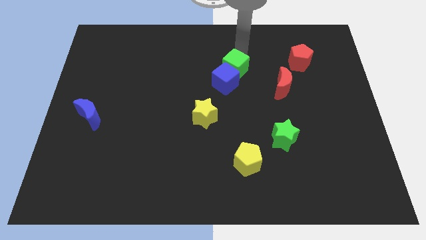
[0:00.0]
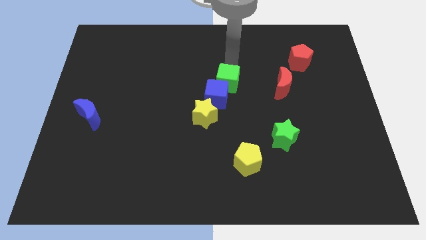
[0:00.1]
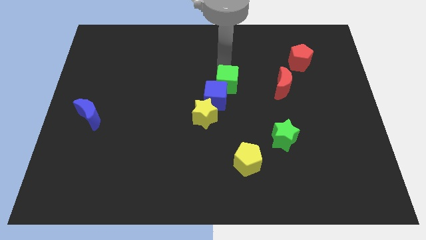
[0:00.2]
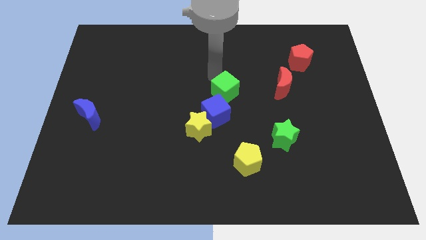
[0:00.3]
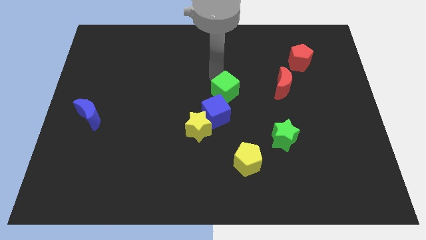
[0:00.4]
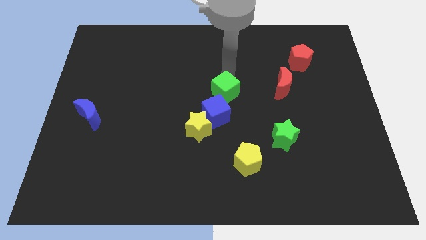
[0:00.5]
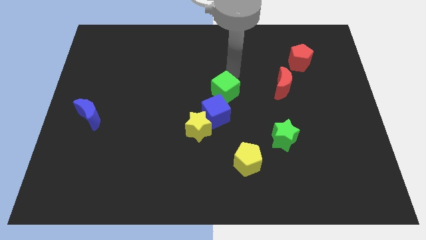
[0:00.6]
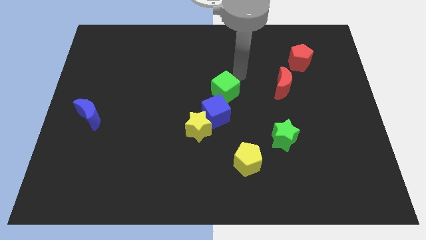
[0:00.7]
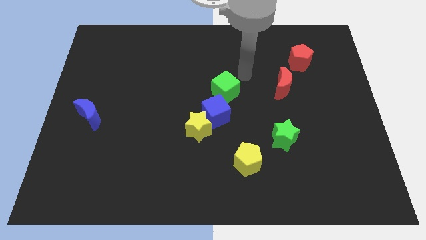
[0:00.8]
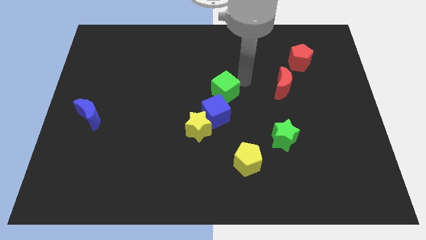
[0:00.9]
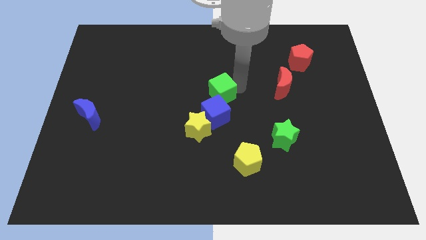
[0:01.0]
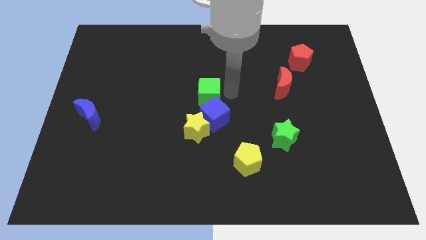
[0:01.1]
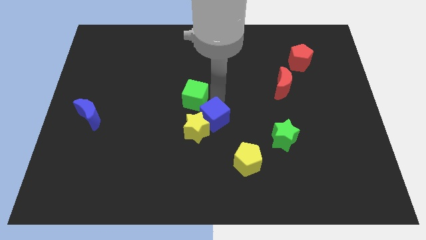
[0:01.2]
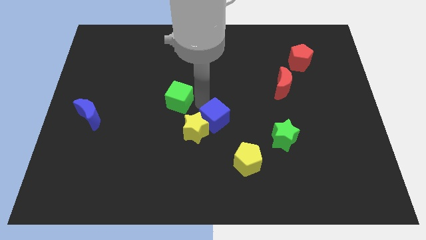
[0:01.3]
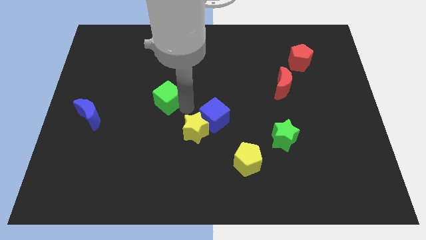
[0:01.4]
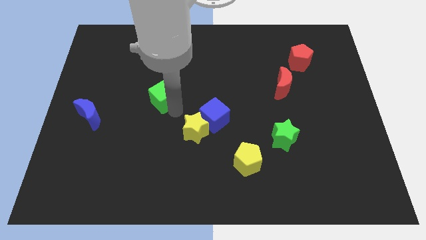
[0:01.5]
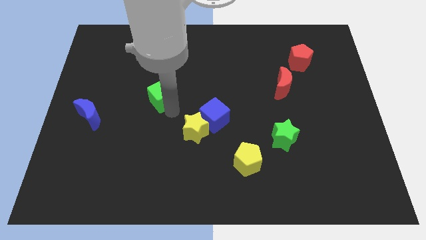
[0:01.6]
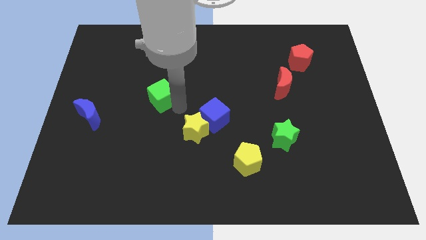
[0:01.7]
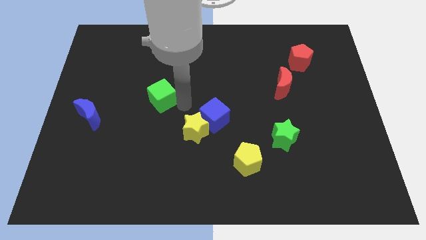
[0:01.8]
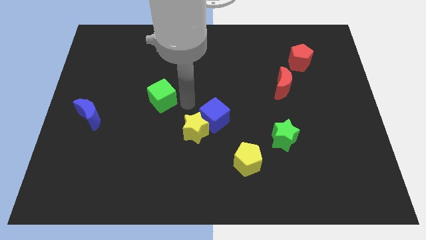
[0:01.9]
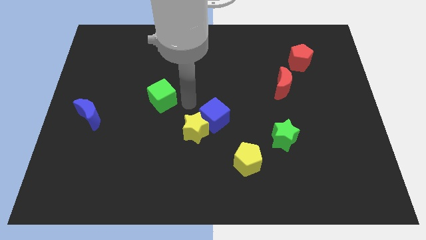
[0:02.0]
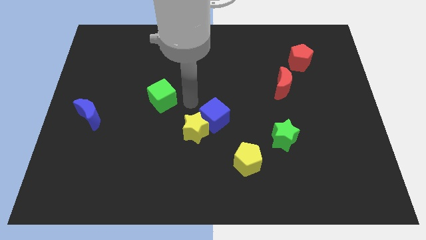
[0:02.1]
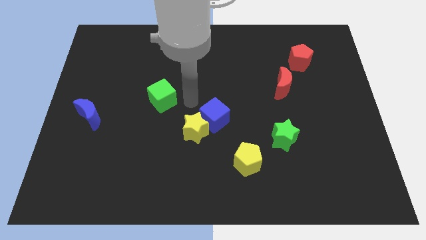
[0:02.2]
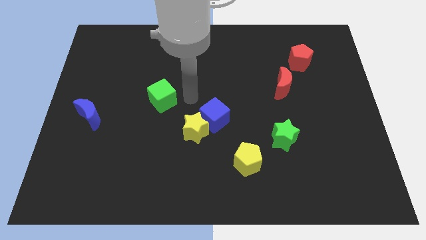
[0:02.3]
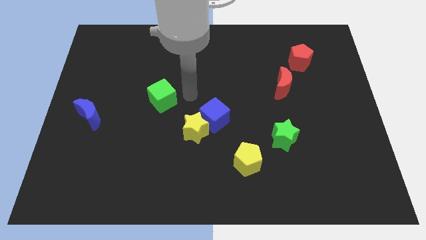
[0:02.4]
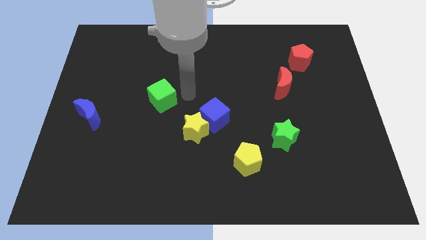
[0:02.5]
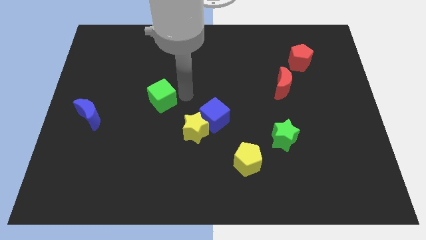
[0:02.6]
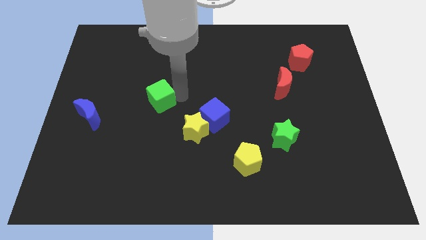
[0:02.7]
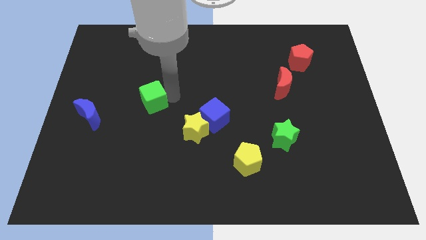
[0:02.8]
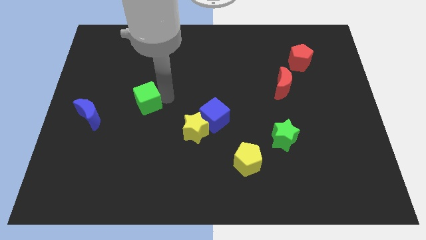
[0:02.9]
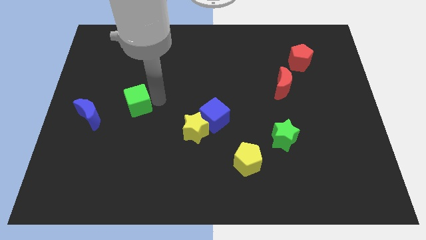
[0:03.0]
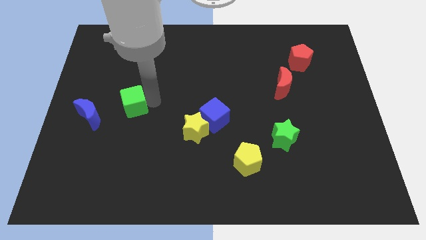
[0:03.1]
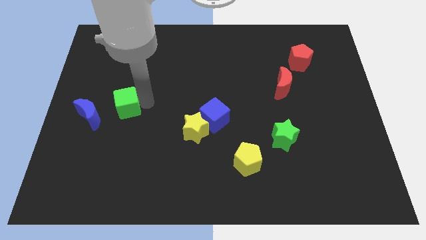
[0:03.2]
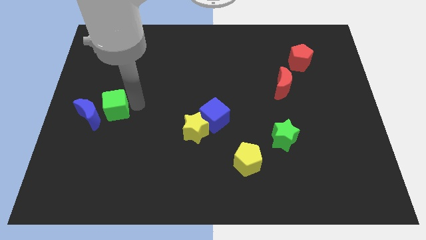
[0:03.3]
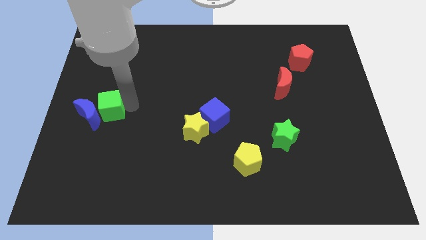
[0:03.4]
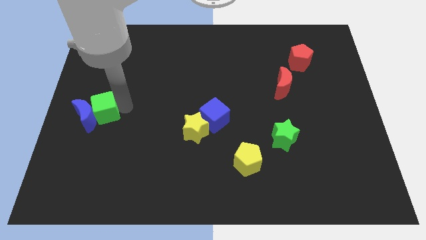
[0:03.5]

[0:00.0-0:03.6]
separate the green cube from the blue cube

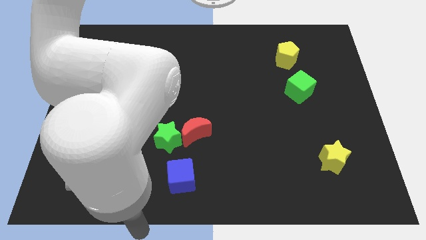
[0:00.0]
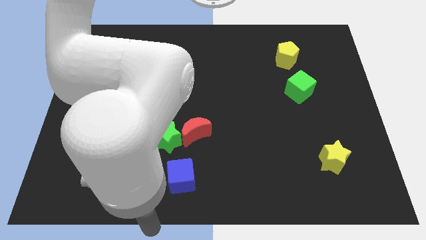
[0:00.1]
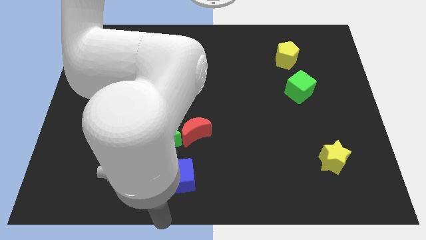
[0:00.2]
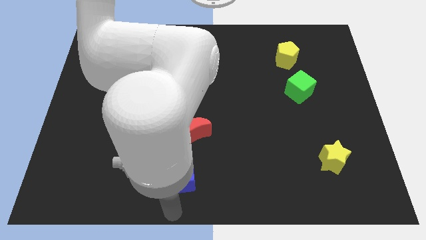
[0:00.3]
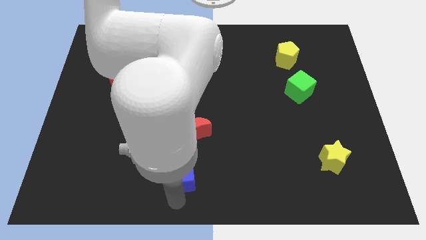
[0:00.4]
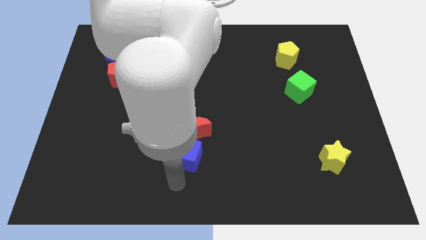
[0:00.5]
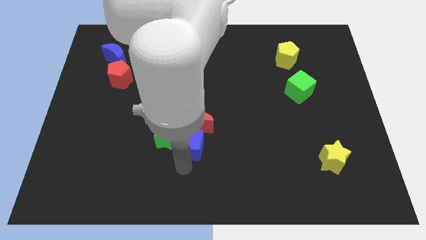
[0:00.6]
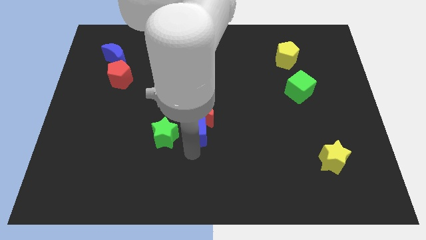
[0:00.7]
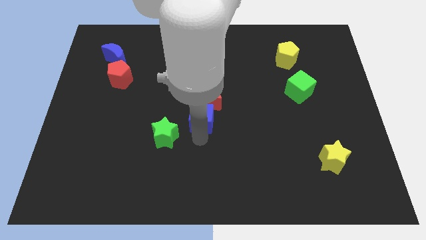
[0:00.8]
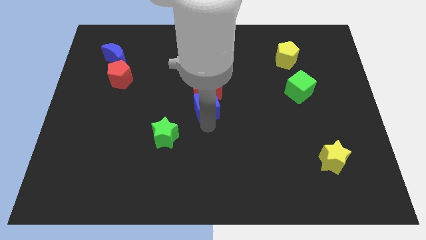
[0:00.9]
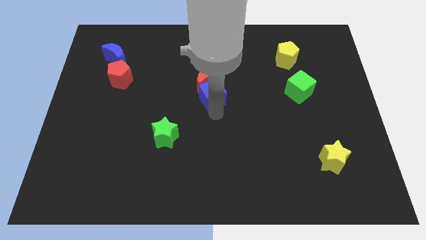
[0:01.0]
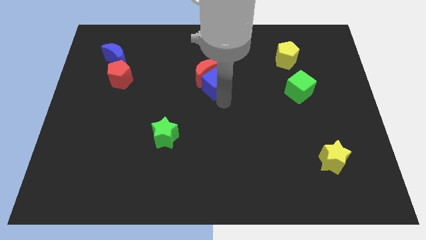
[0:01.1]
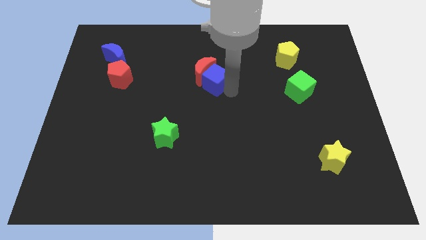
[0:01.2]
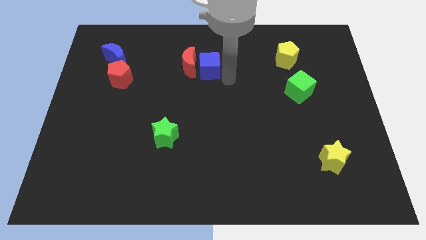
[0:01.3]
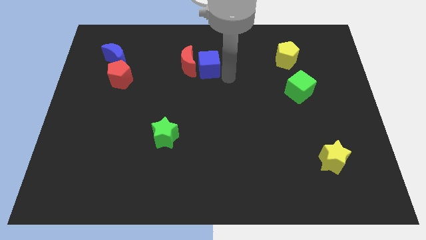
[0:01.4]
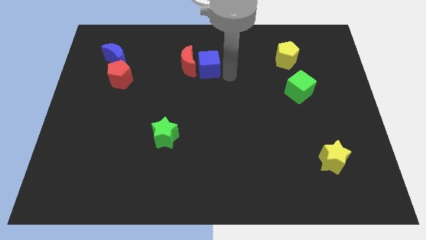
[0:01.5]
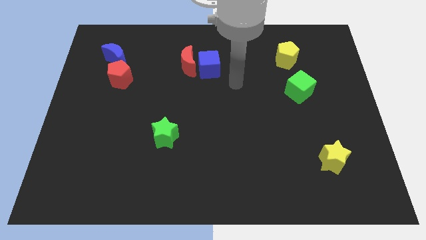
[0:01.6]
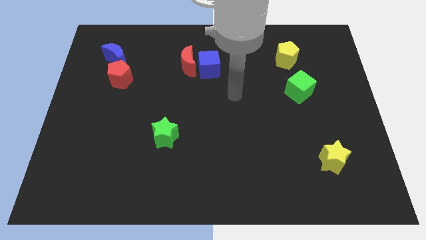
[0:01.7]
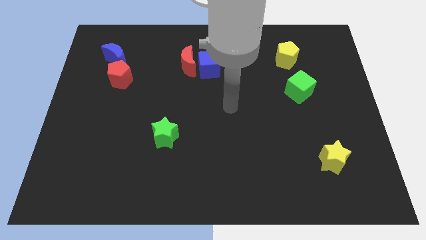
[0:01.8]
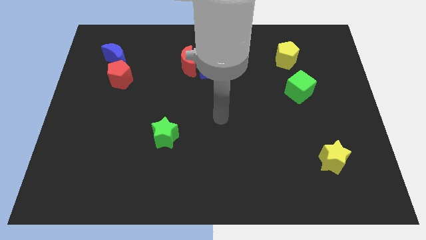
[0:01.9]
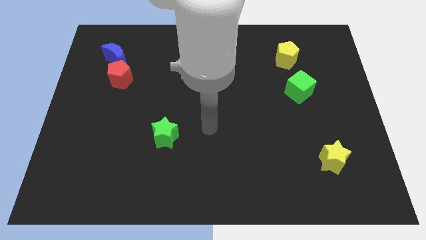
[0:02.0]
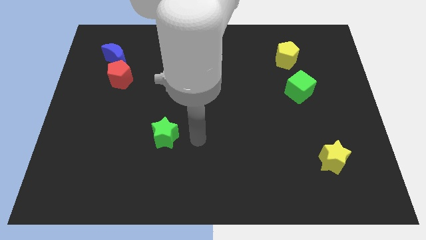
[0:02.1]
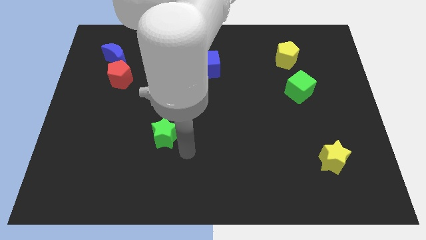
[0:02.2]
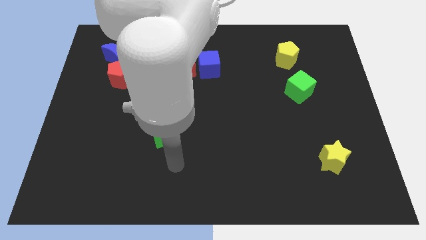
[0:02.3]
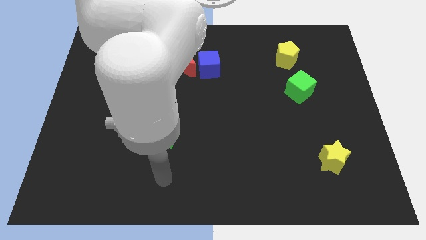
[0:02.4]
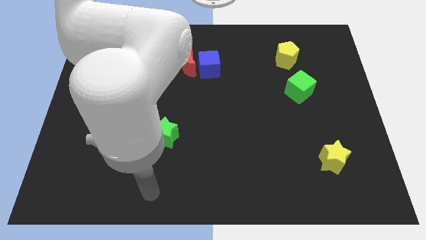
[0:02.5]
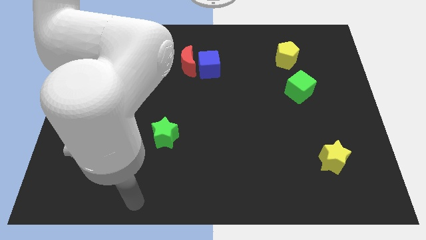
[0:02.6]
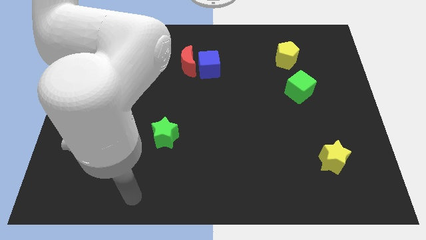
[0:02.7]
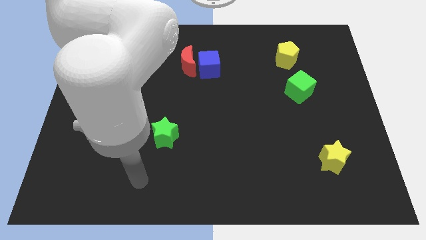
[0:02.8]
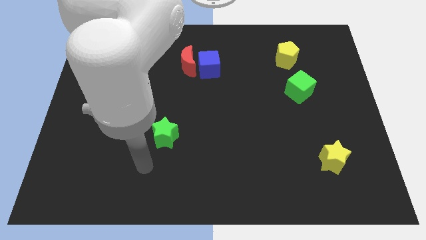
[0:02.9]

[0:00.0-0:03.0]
push blue cube to the center

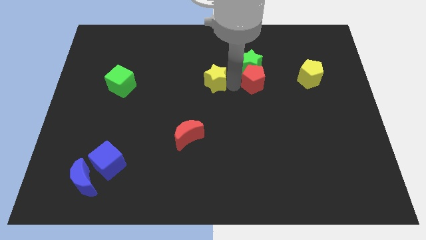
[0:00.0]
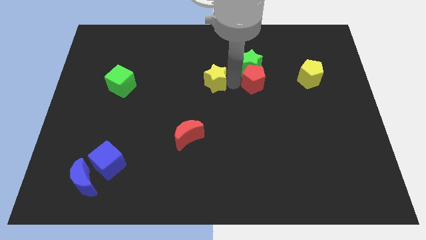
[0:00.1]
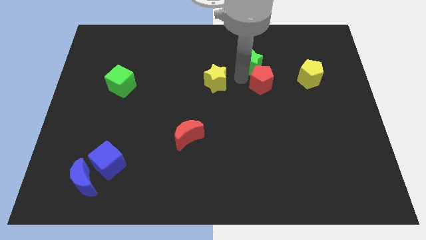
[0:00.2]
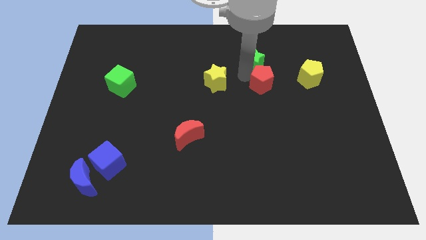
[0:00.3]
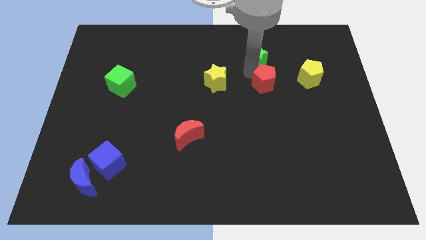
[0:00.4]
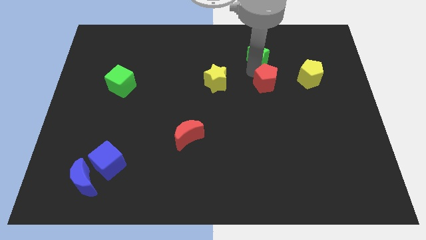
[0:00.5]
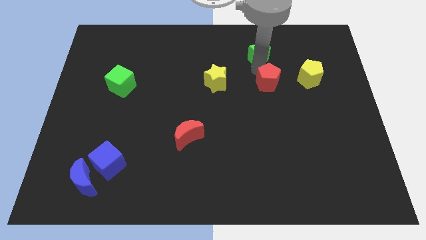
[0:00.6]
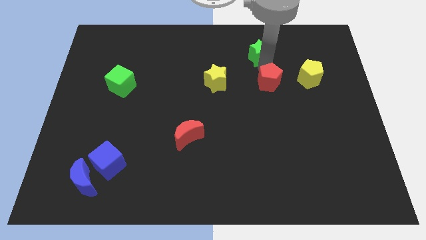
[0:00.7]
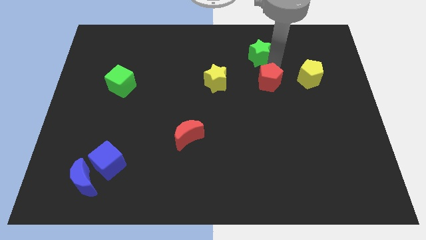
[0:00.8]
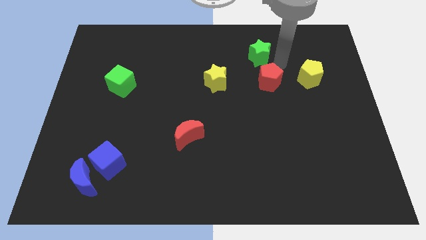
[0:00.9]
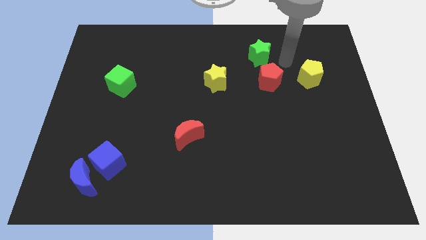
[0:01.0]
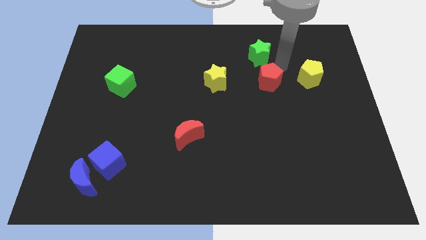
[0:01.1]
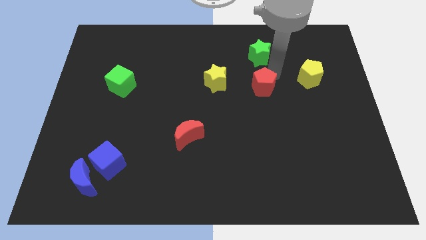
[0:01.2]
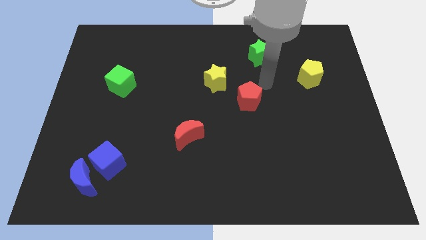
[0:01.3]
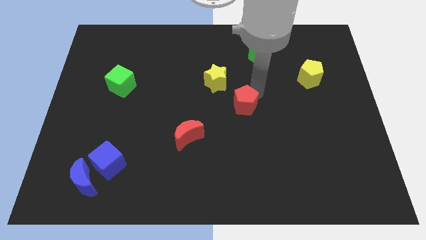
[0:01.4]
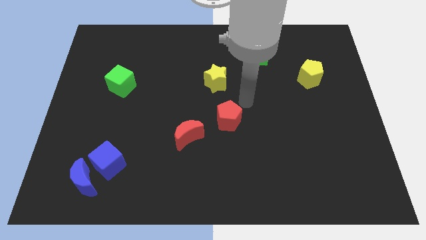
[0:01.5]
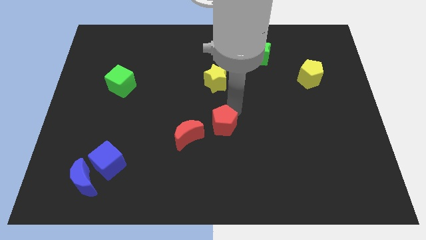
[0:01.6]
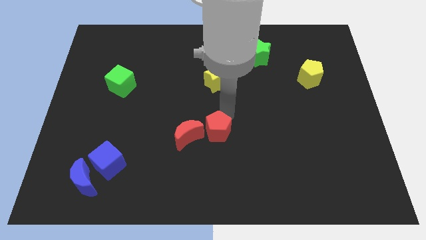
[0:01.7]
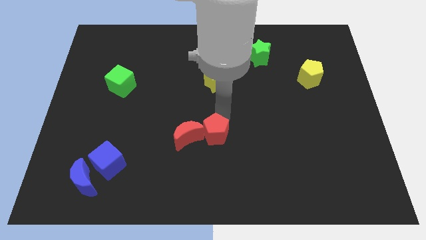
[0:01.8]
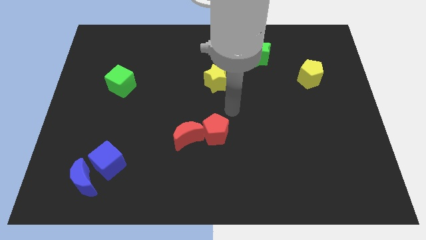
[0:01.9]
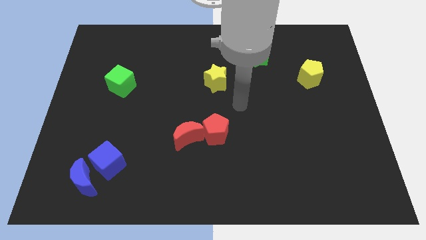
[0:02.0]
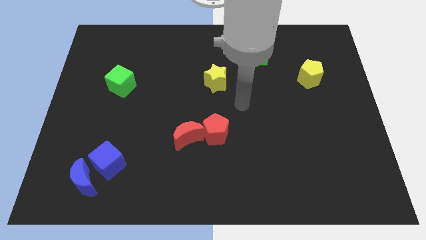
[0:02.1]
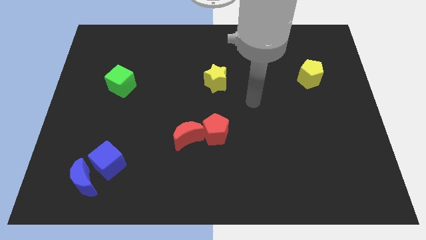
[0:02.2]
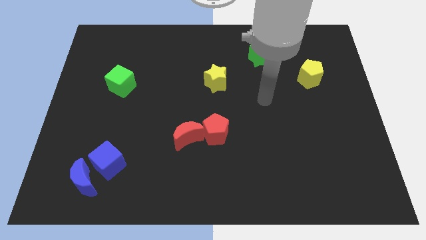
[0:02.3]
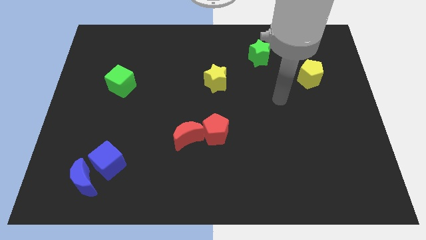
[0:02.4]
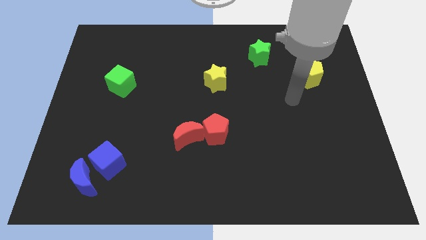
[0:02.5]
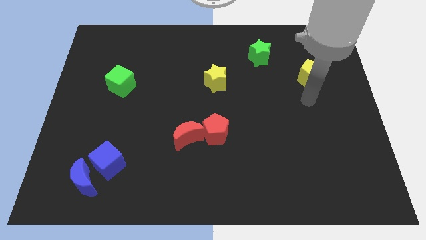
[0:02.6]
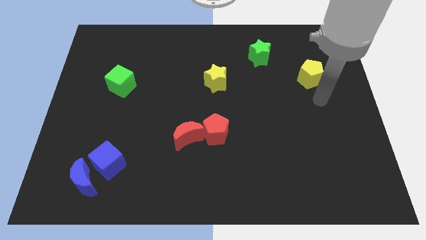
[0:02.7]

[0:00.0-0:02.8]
push the red pentagon into the red moon
